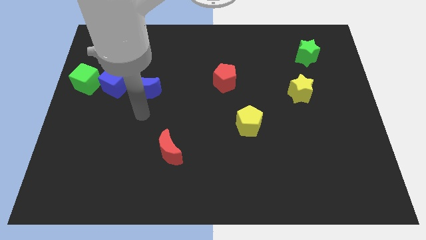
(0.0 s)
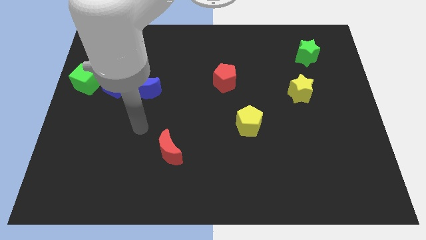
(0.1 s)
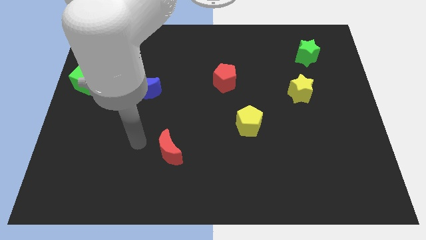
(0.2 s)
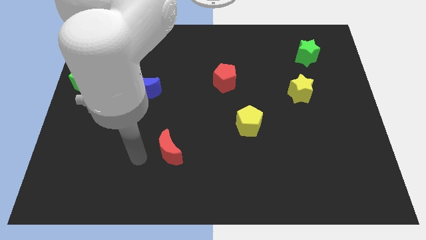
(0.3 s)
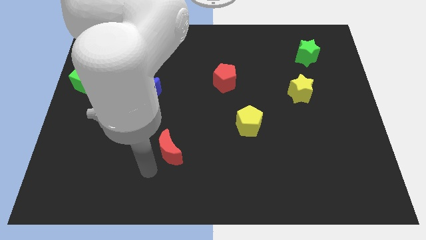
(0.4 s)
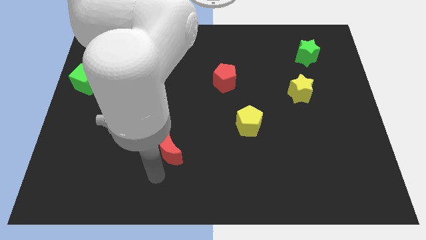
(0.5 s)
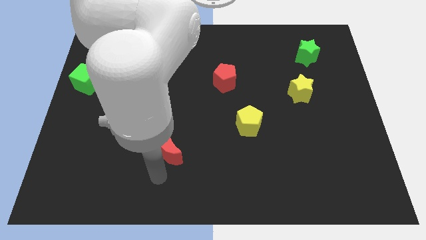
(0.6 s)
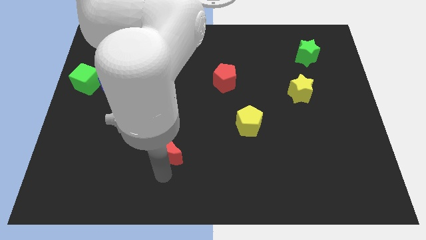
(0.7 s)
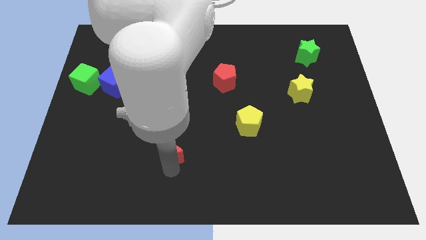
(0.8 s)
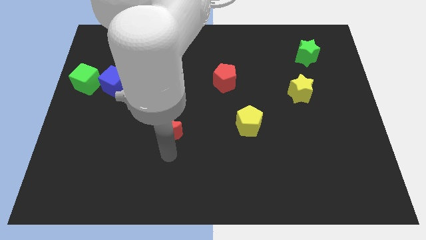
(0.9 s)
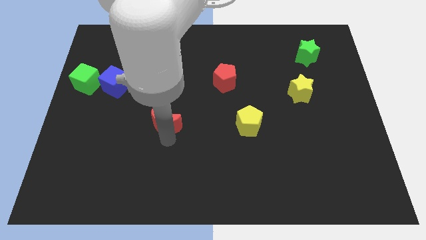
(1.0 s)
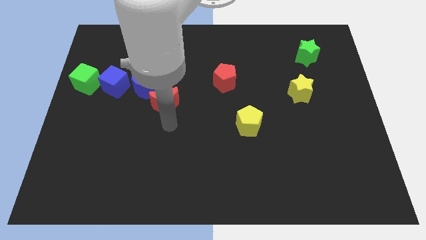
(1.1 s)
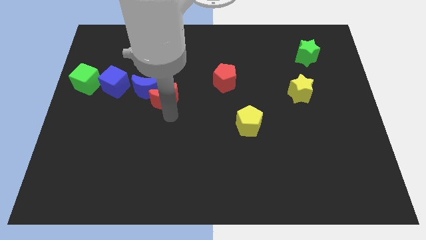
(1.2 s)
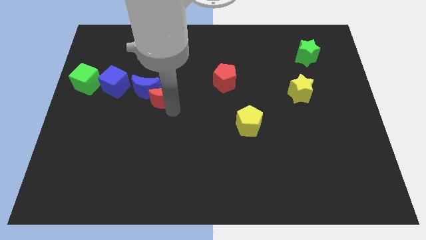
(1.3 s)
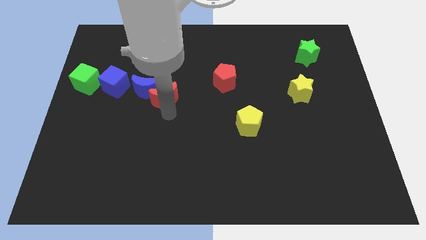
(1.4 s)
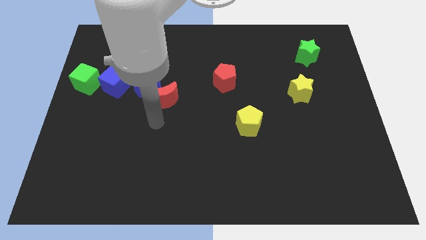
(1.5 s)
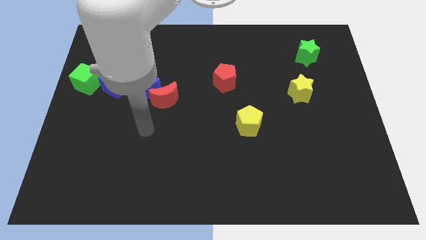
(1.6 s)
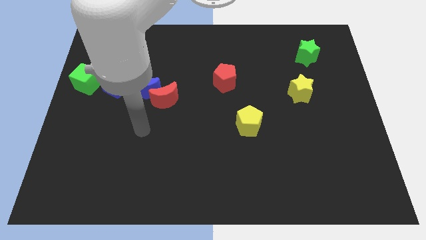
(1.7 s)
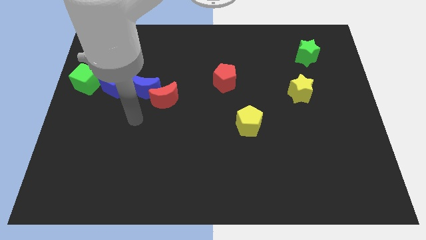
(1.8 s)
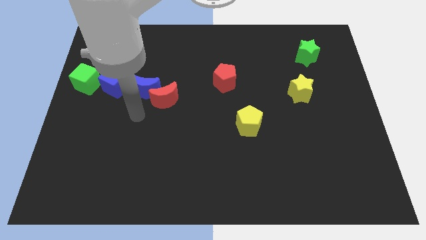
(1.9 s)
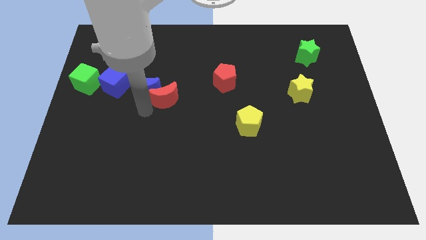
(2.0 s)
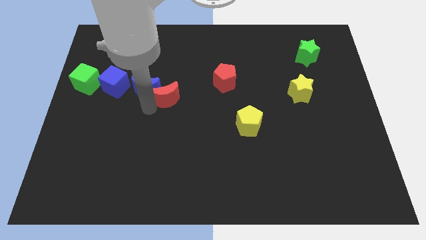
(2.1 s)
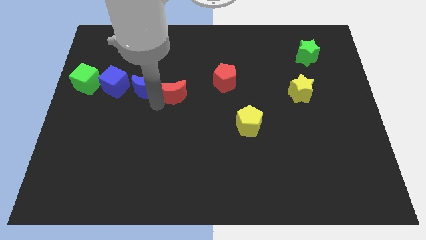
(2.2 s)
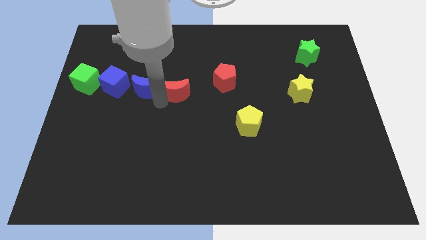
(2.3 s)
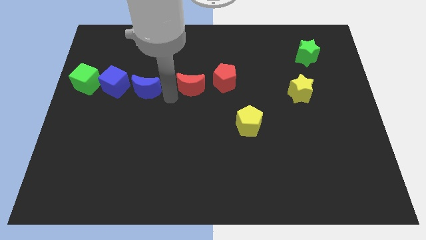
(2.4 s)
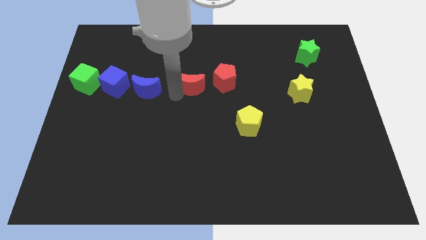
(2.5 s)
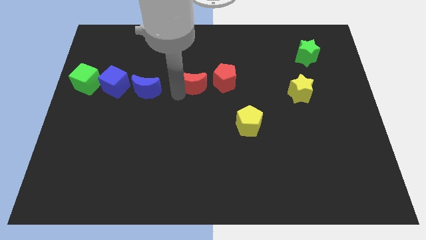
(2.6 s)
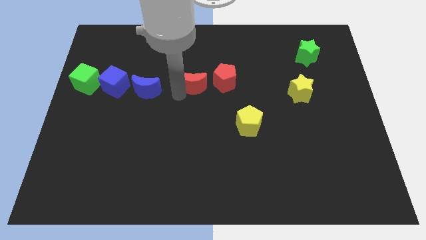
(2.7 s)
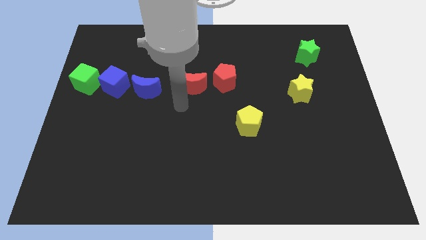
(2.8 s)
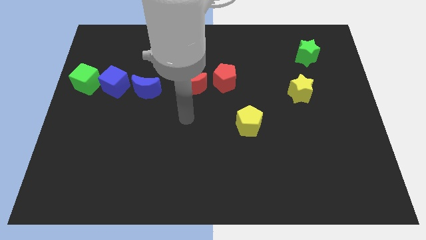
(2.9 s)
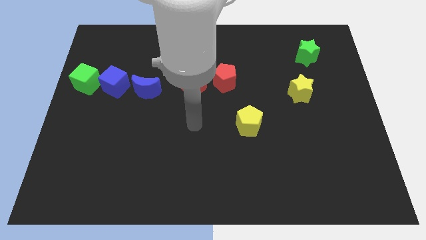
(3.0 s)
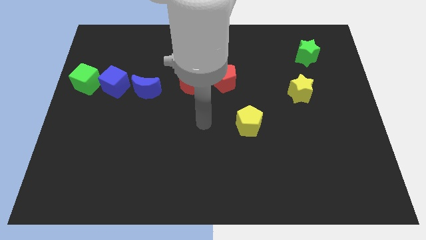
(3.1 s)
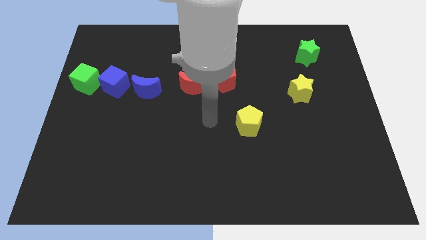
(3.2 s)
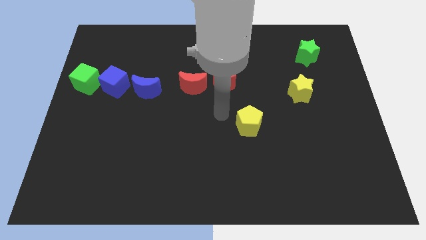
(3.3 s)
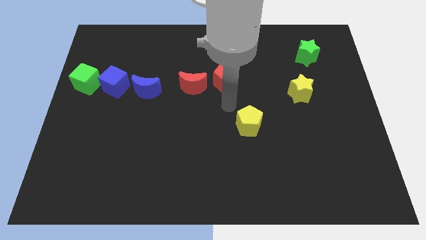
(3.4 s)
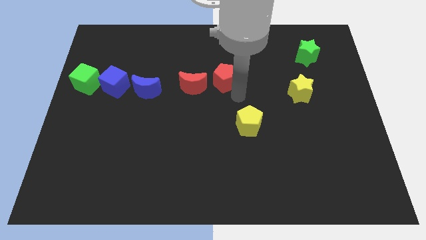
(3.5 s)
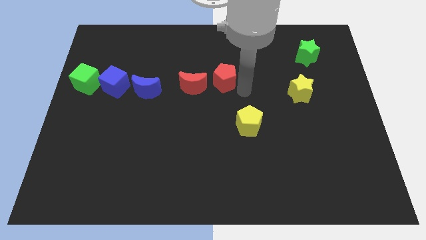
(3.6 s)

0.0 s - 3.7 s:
place the red crescent in between the red pentagon and blue crescent

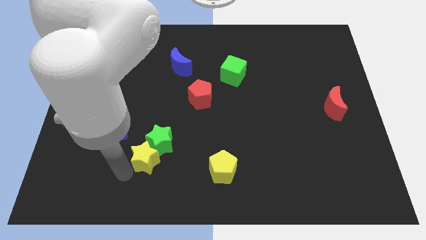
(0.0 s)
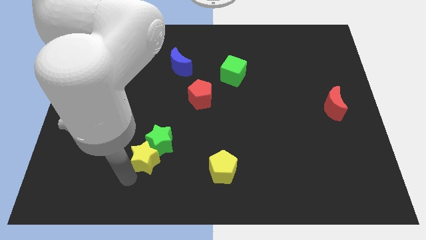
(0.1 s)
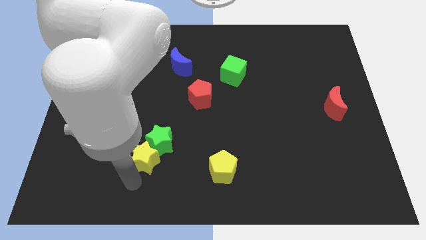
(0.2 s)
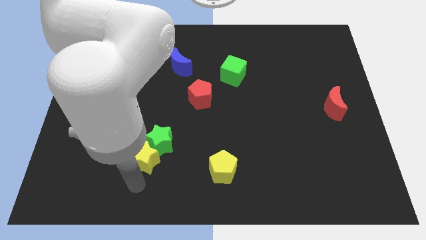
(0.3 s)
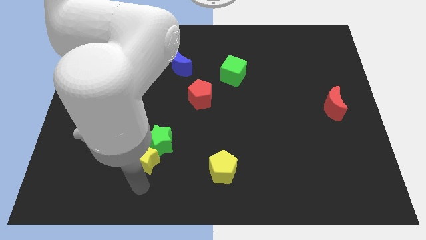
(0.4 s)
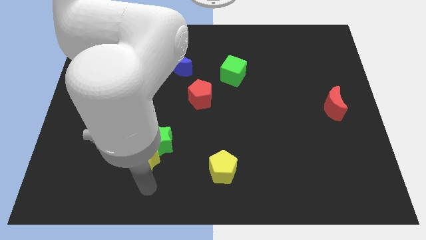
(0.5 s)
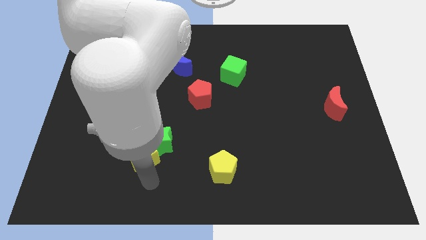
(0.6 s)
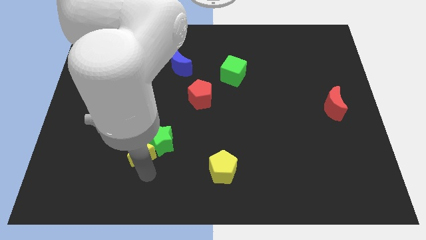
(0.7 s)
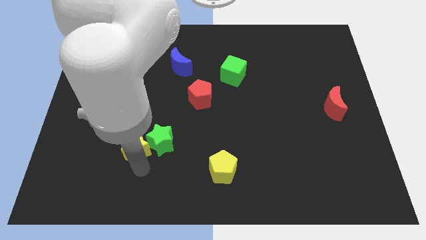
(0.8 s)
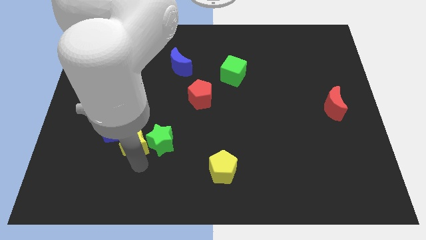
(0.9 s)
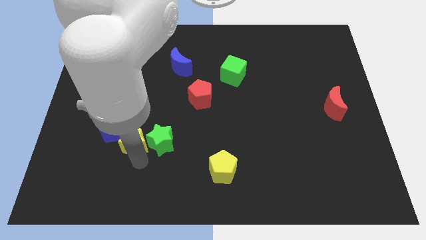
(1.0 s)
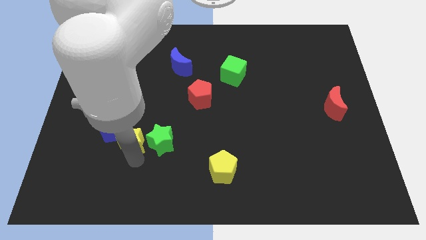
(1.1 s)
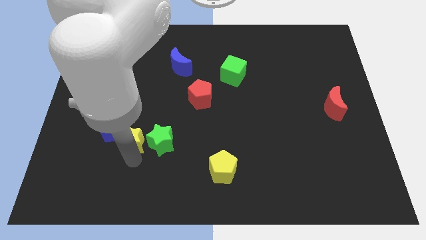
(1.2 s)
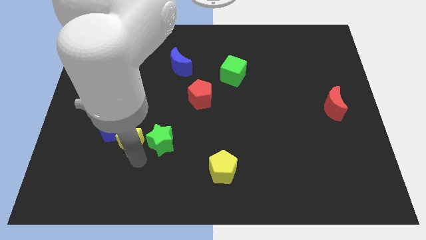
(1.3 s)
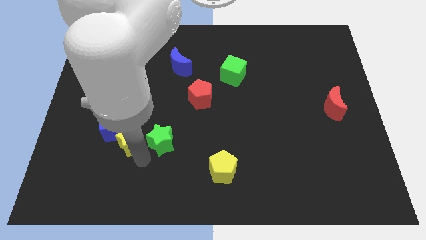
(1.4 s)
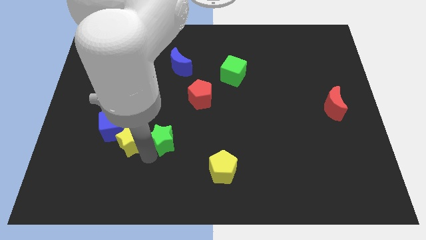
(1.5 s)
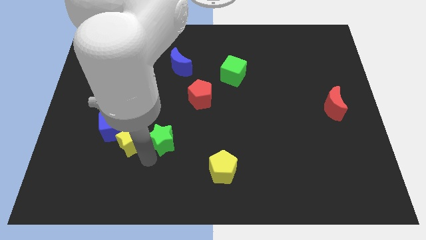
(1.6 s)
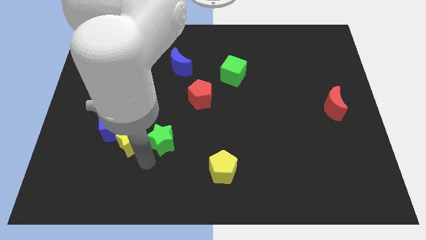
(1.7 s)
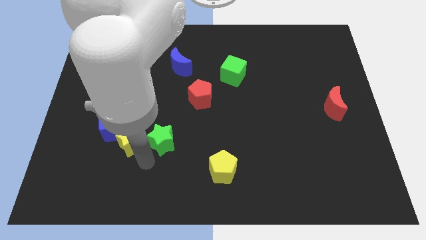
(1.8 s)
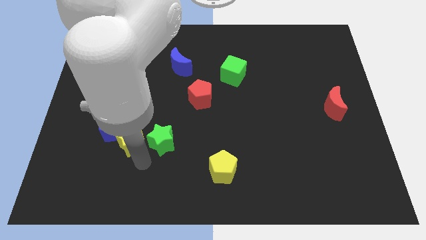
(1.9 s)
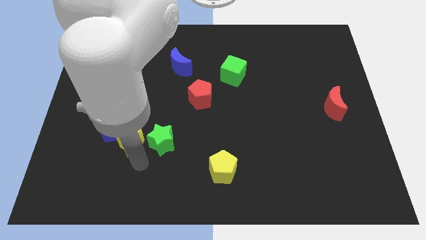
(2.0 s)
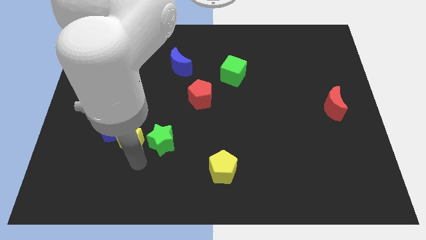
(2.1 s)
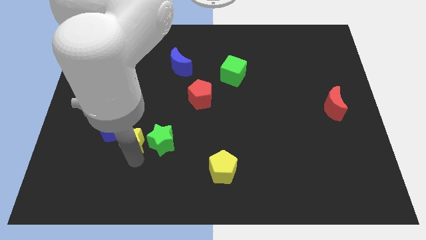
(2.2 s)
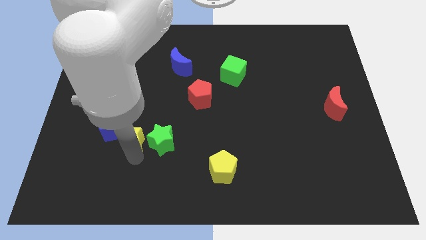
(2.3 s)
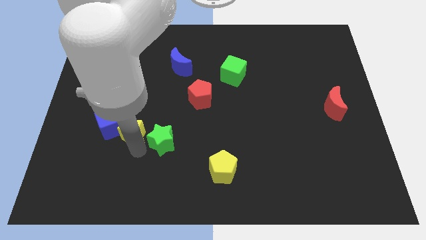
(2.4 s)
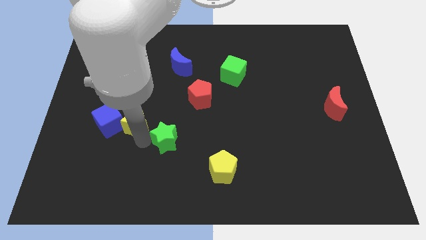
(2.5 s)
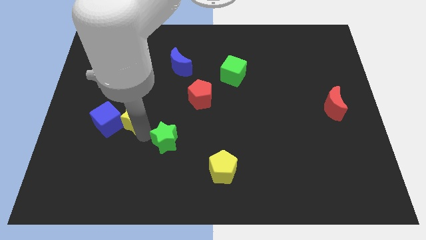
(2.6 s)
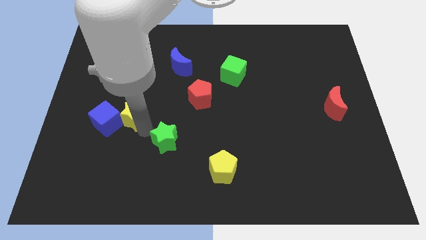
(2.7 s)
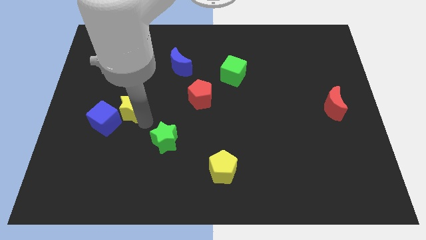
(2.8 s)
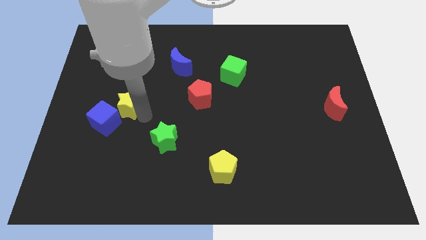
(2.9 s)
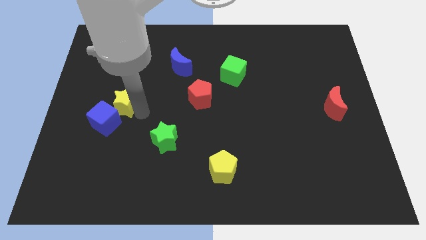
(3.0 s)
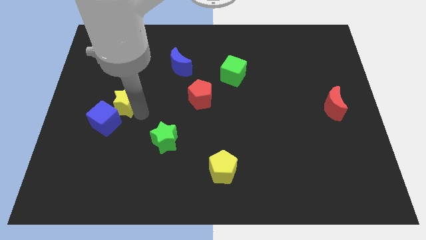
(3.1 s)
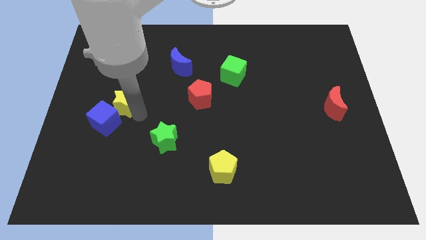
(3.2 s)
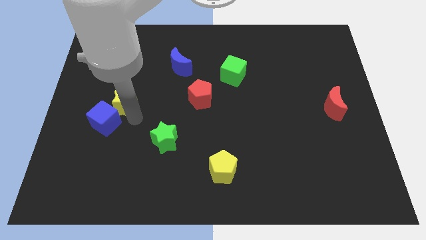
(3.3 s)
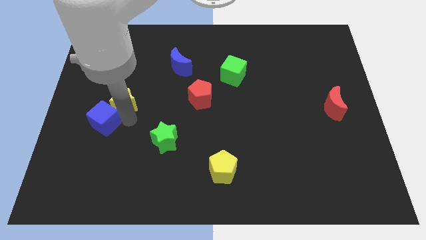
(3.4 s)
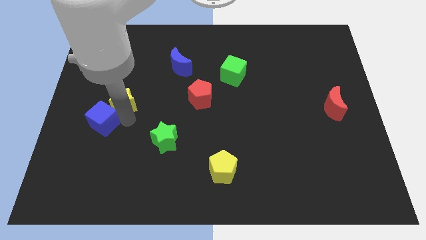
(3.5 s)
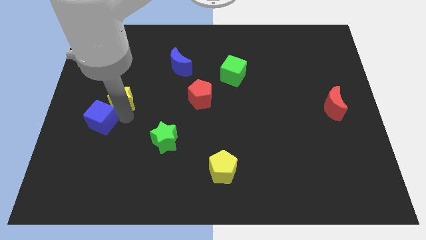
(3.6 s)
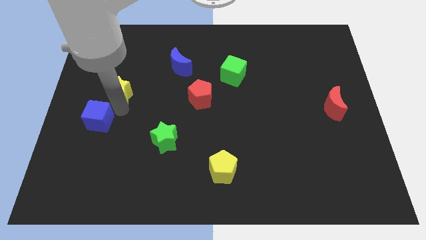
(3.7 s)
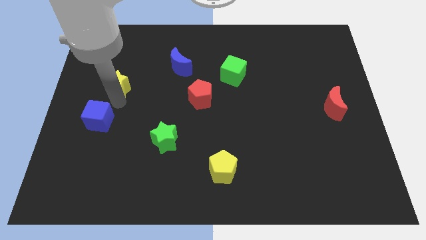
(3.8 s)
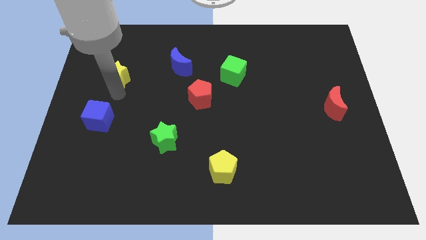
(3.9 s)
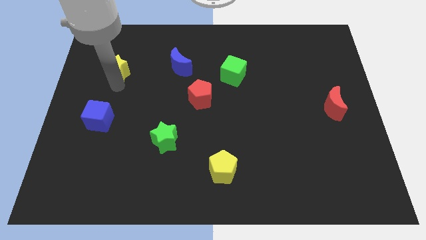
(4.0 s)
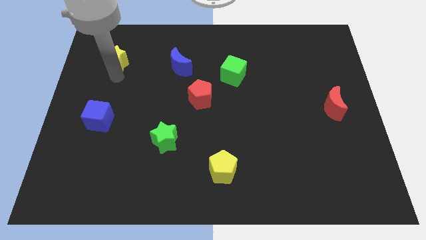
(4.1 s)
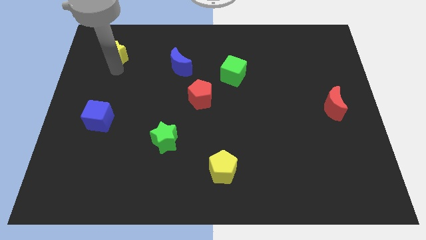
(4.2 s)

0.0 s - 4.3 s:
place the yellow star above the blue cube

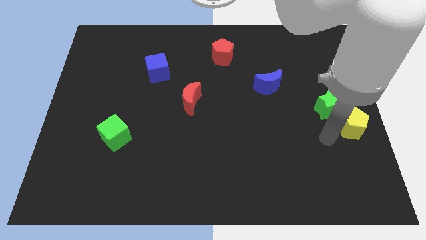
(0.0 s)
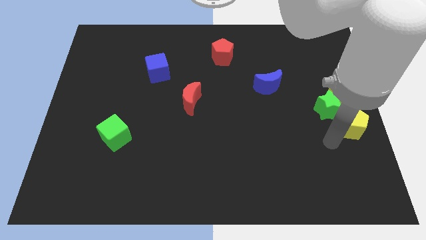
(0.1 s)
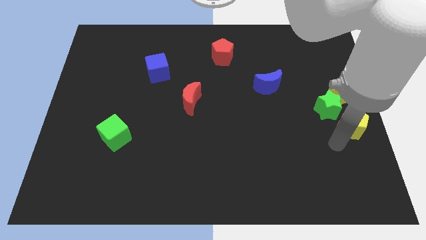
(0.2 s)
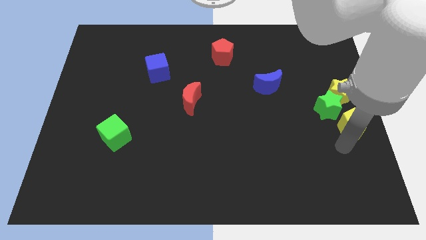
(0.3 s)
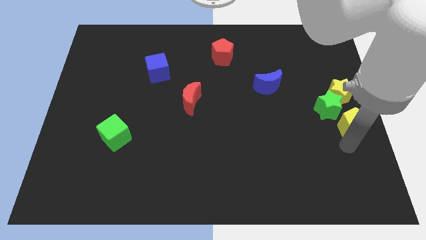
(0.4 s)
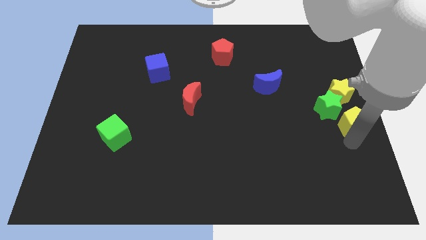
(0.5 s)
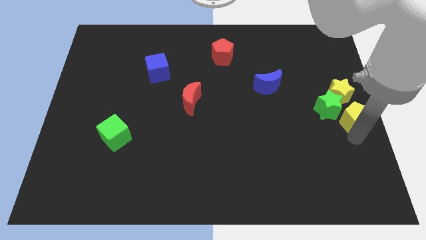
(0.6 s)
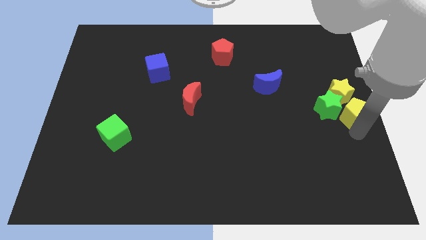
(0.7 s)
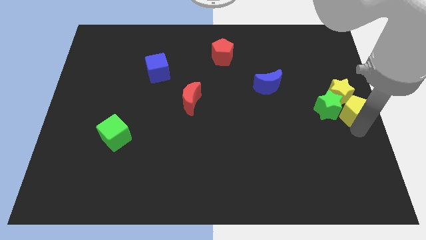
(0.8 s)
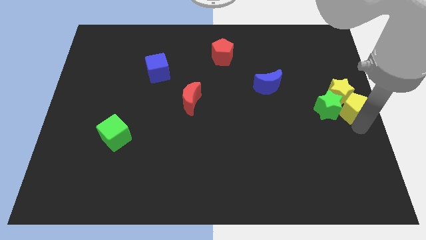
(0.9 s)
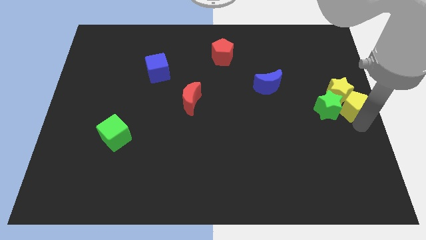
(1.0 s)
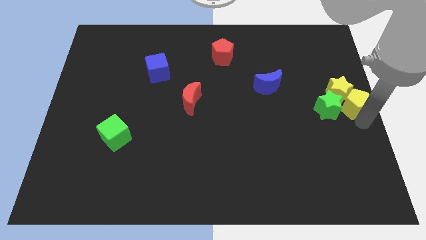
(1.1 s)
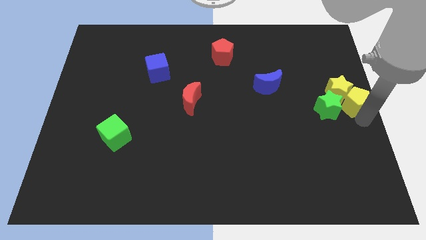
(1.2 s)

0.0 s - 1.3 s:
move the yellow pentagon to the right of the green star
